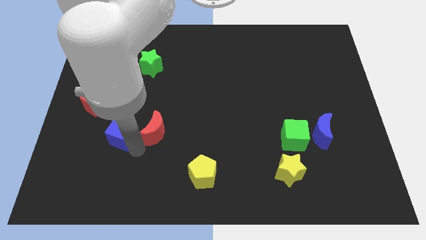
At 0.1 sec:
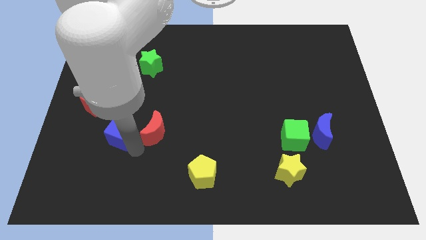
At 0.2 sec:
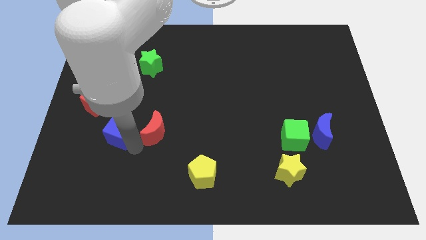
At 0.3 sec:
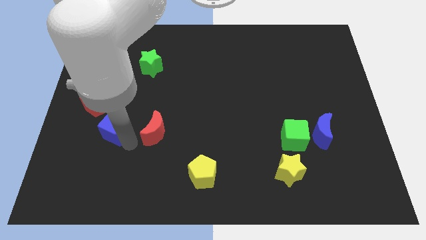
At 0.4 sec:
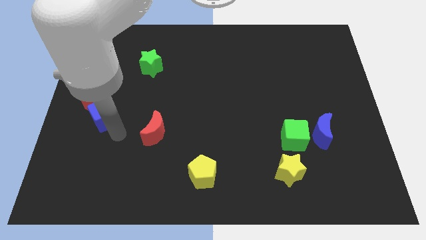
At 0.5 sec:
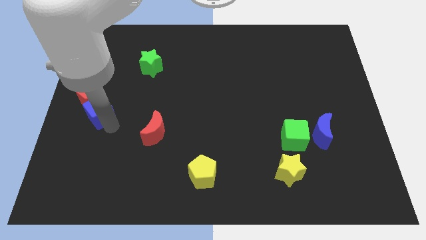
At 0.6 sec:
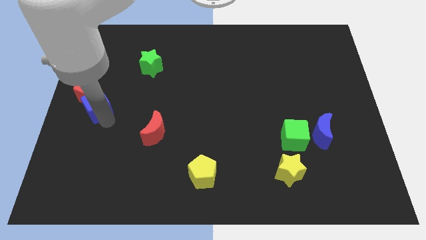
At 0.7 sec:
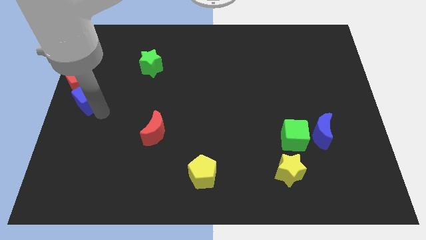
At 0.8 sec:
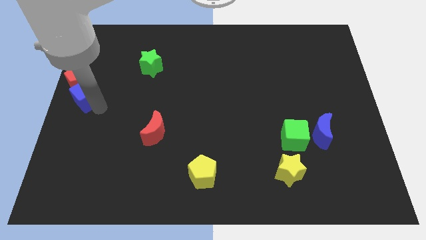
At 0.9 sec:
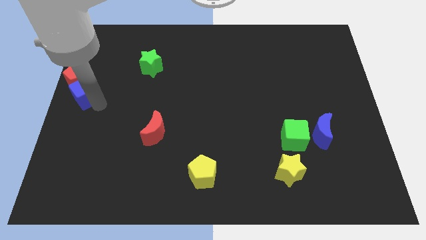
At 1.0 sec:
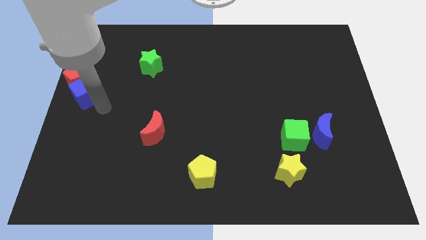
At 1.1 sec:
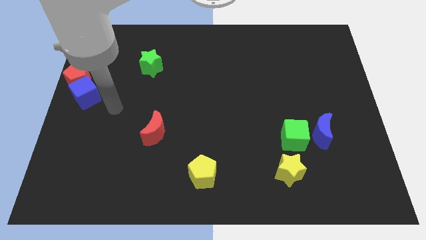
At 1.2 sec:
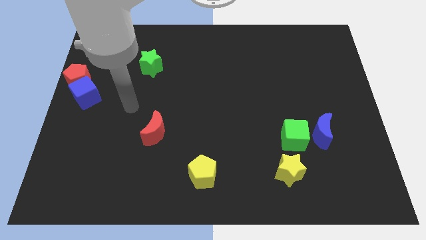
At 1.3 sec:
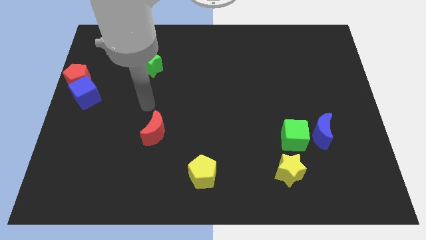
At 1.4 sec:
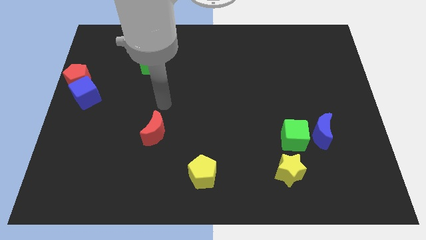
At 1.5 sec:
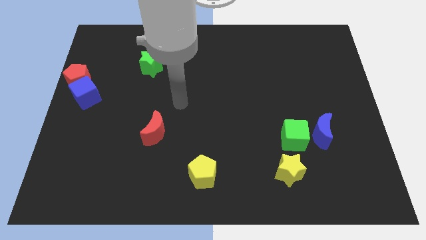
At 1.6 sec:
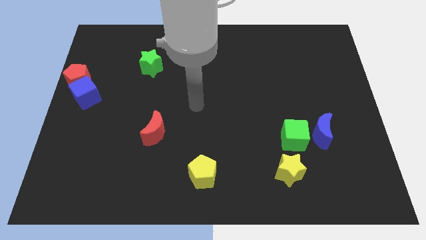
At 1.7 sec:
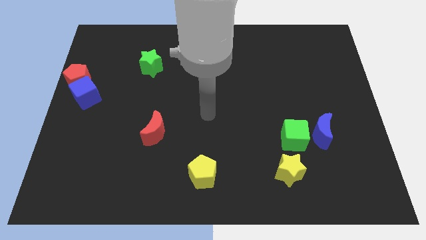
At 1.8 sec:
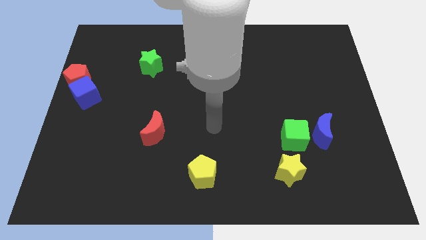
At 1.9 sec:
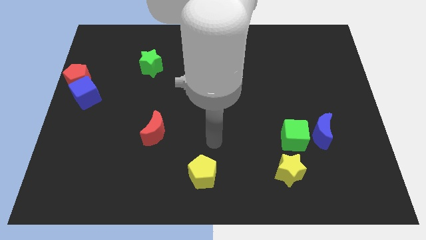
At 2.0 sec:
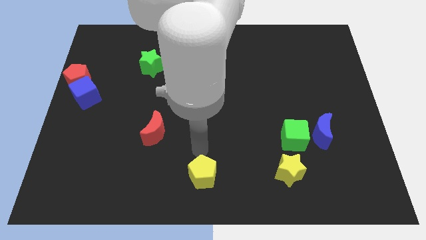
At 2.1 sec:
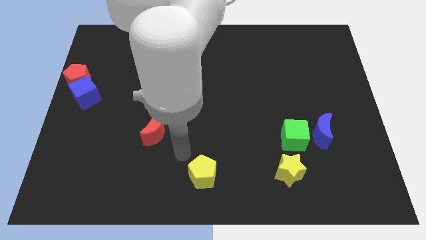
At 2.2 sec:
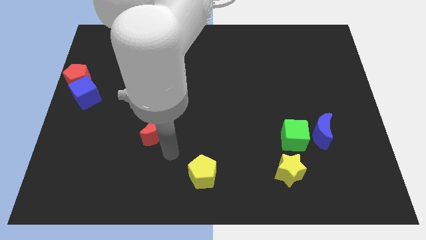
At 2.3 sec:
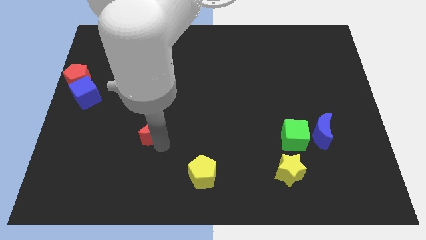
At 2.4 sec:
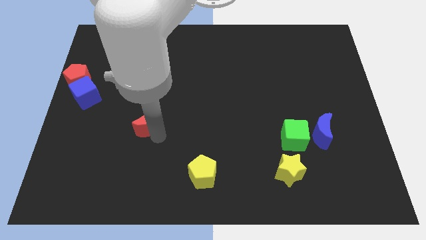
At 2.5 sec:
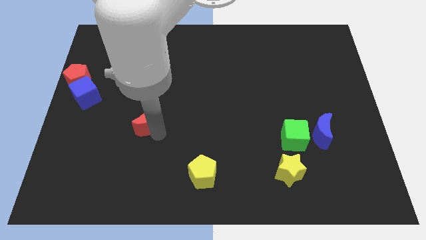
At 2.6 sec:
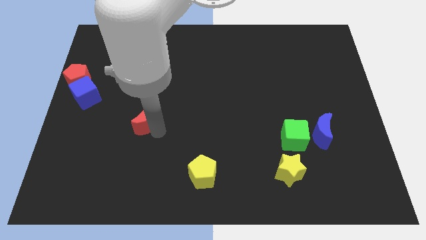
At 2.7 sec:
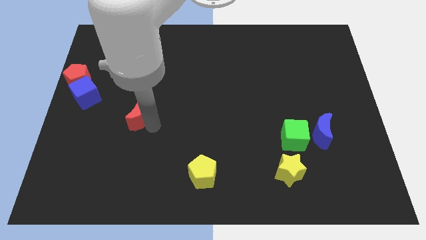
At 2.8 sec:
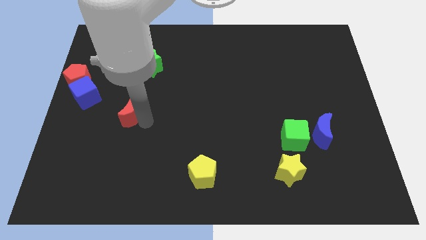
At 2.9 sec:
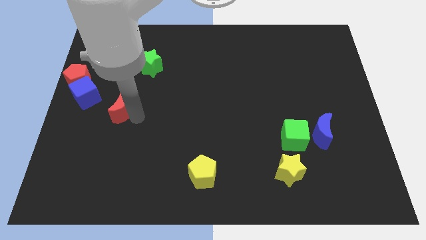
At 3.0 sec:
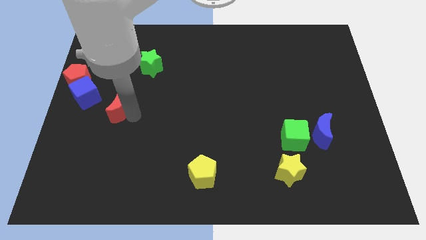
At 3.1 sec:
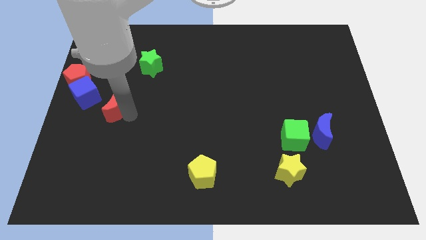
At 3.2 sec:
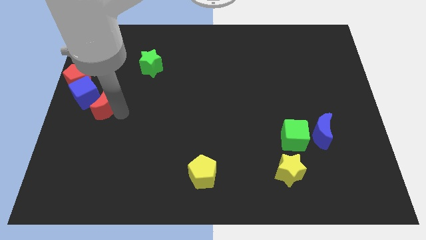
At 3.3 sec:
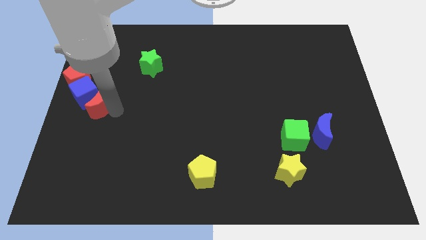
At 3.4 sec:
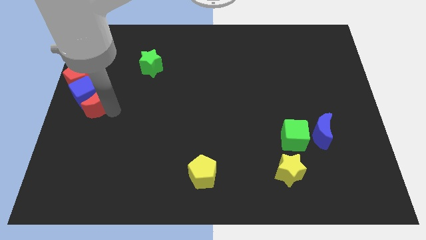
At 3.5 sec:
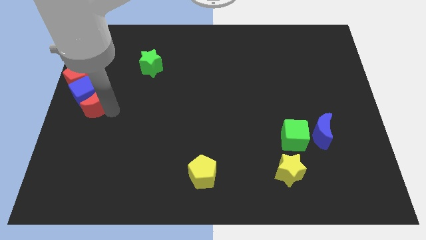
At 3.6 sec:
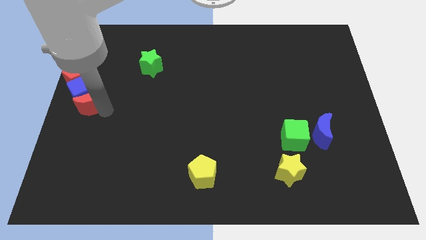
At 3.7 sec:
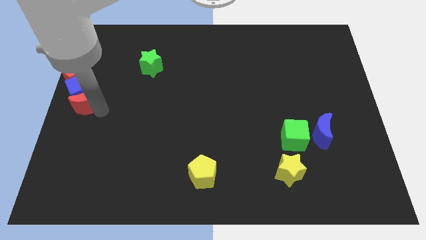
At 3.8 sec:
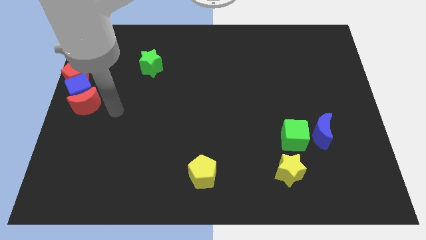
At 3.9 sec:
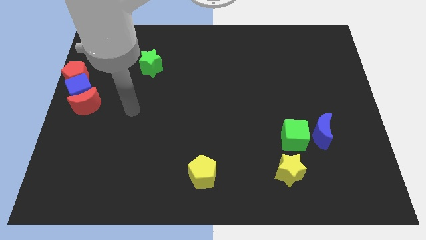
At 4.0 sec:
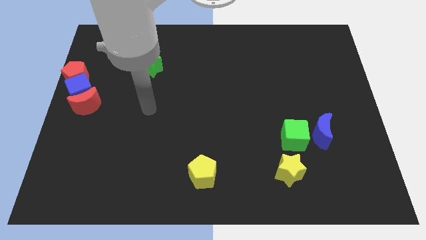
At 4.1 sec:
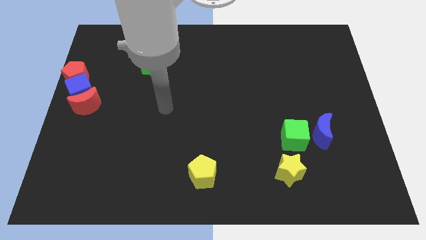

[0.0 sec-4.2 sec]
push the red blocks and blue cube towards the center left side of the board

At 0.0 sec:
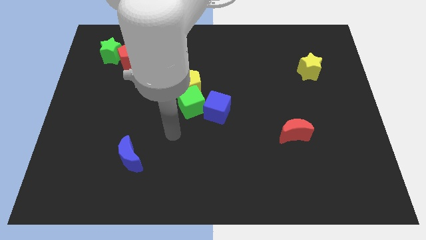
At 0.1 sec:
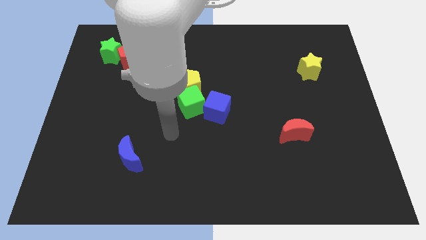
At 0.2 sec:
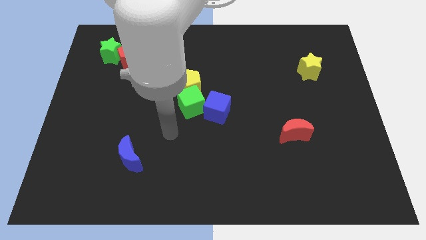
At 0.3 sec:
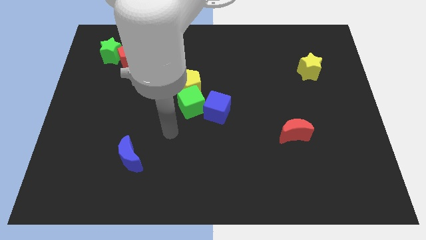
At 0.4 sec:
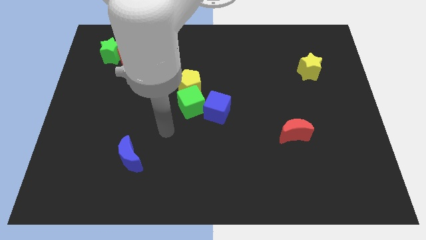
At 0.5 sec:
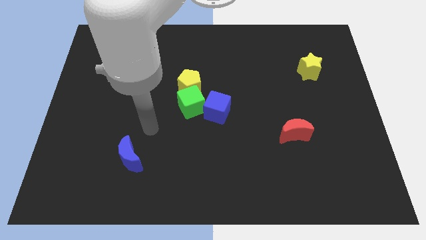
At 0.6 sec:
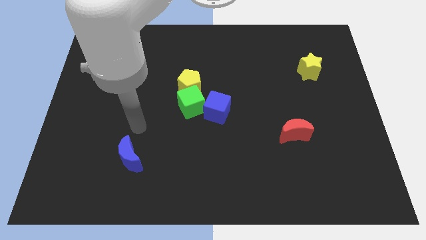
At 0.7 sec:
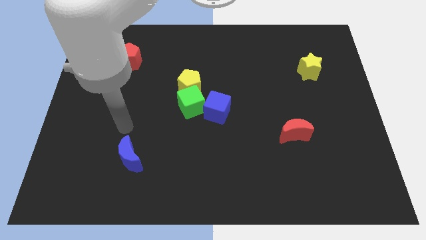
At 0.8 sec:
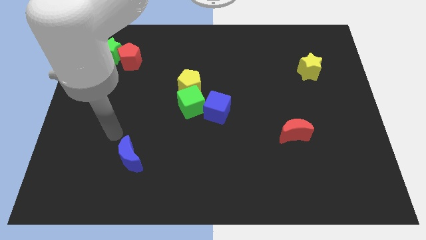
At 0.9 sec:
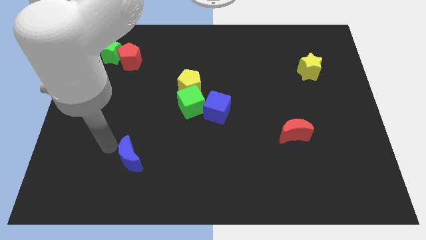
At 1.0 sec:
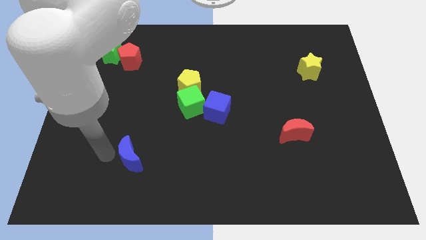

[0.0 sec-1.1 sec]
move your arm to the left of blue moon

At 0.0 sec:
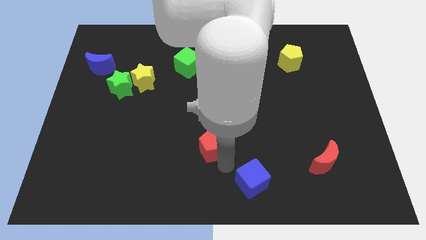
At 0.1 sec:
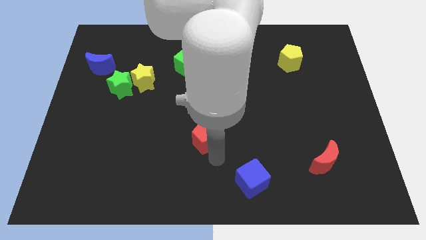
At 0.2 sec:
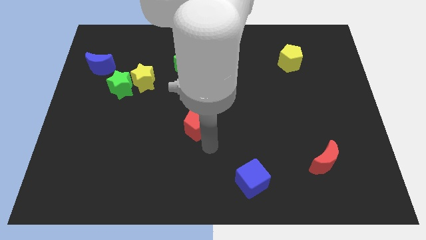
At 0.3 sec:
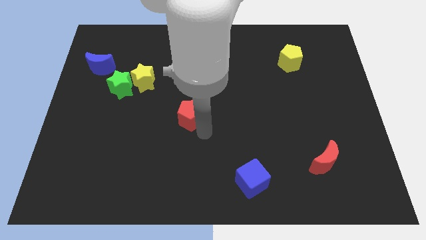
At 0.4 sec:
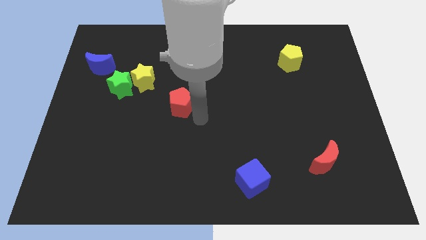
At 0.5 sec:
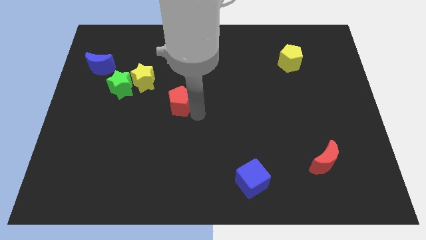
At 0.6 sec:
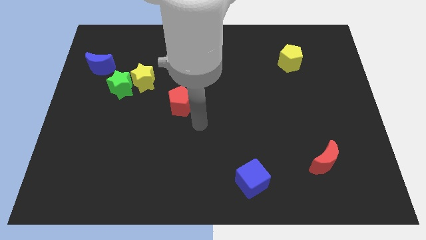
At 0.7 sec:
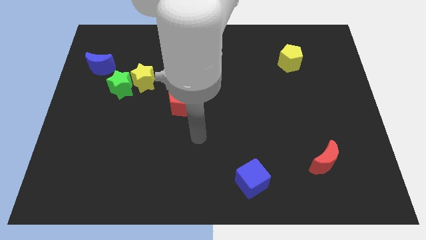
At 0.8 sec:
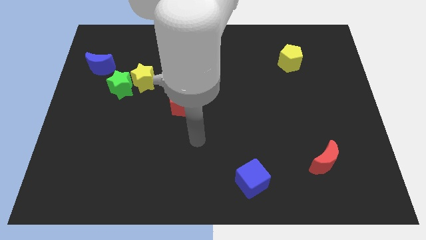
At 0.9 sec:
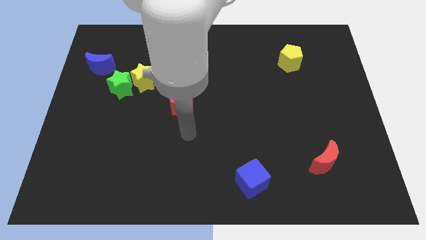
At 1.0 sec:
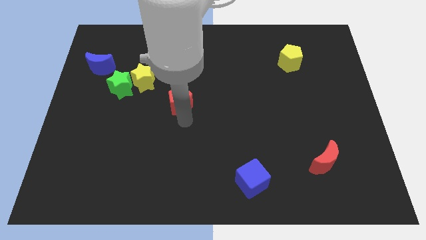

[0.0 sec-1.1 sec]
move red pentagon diagonally up

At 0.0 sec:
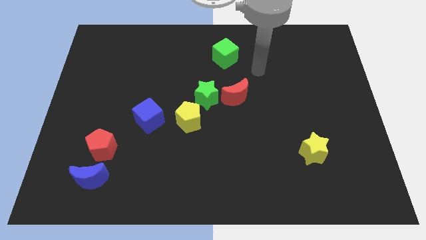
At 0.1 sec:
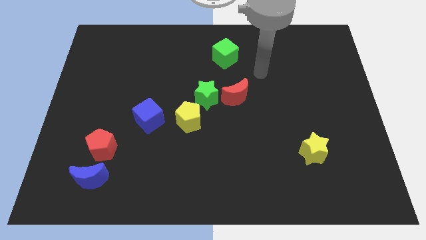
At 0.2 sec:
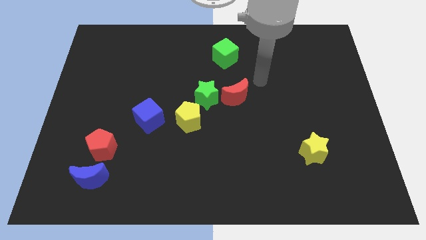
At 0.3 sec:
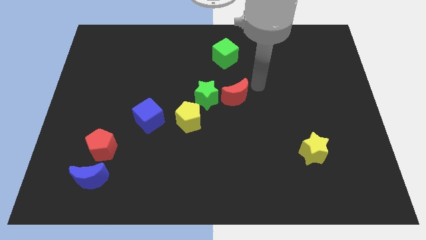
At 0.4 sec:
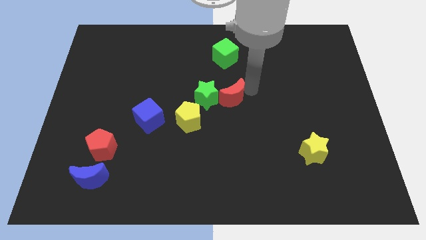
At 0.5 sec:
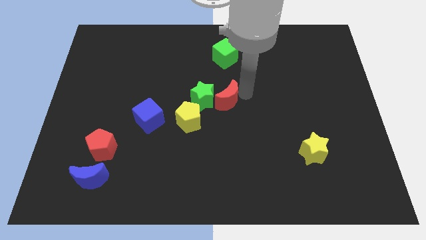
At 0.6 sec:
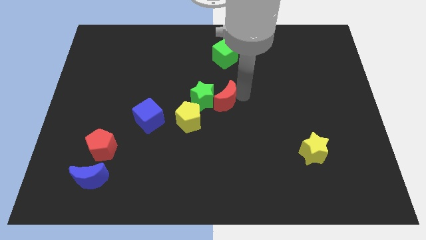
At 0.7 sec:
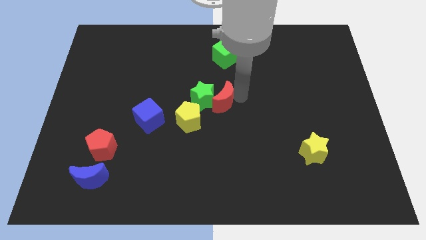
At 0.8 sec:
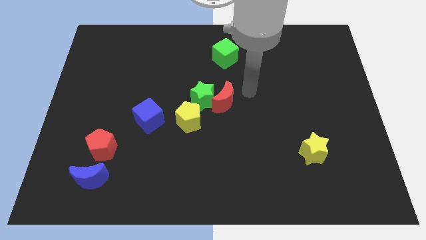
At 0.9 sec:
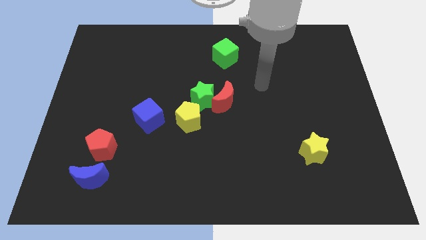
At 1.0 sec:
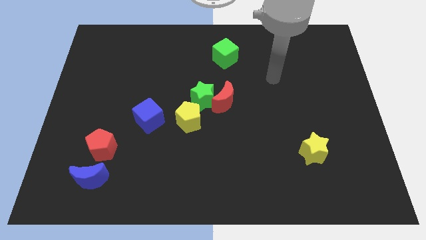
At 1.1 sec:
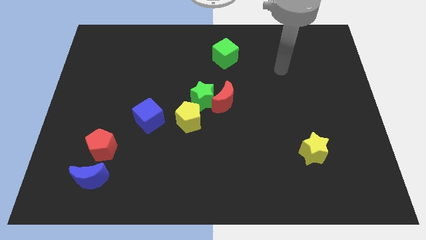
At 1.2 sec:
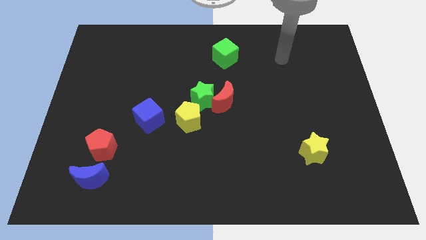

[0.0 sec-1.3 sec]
slide the red moon close to the right side of the green star

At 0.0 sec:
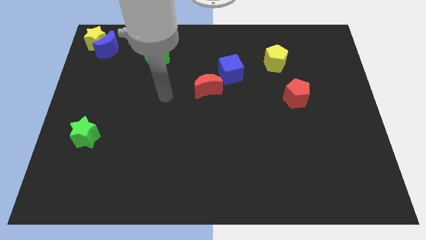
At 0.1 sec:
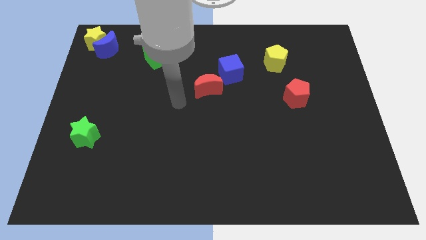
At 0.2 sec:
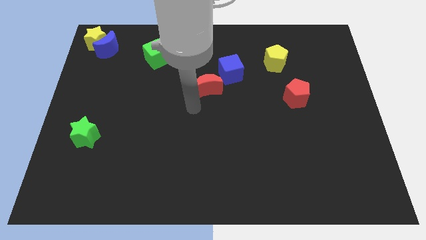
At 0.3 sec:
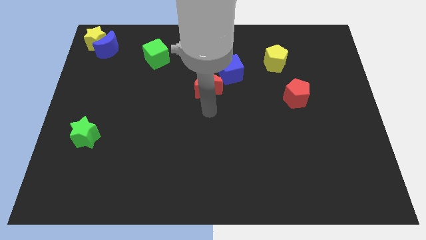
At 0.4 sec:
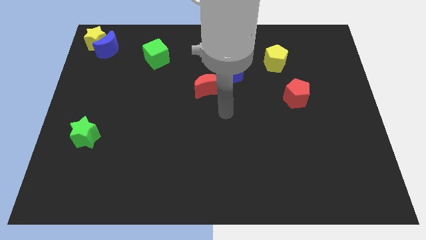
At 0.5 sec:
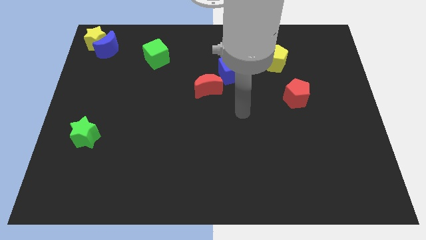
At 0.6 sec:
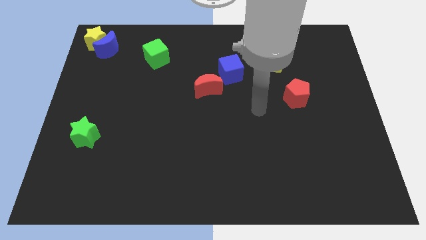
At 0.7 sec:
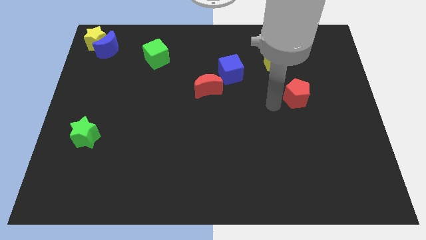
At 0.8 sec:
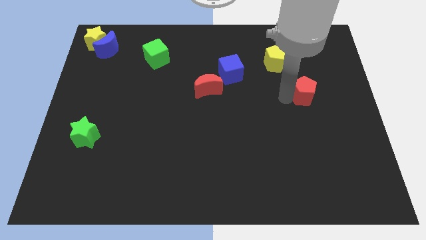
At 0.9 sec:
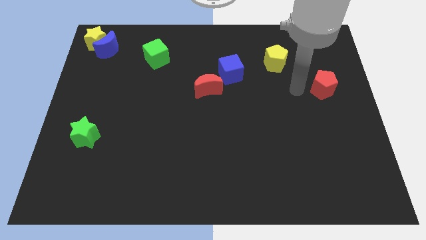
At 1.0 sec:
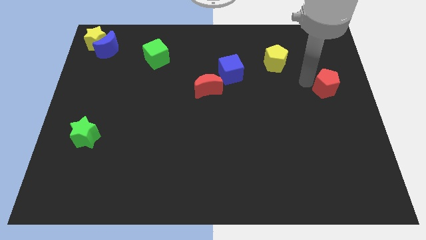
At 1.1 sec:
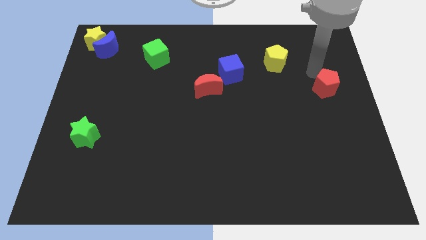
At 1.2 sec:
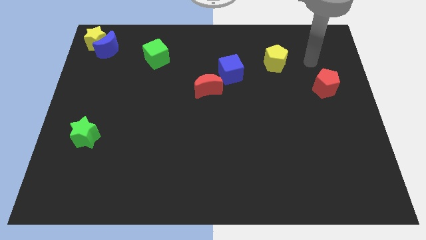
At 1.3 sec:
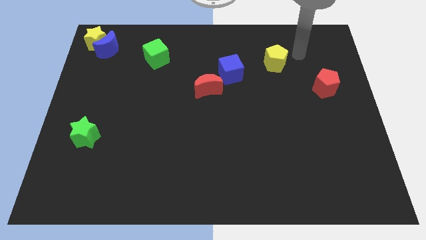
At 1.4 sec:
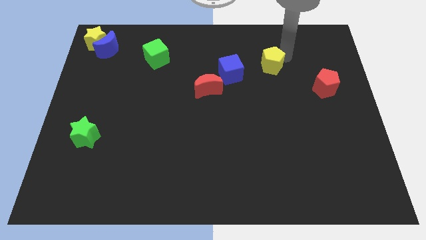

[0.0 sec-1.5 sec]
place the red pentagon diagonally to the yellow pentagon
